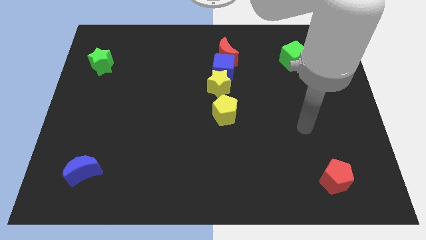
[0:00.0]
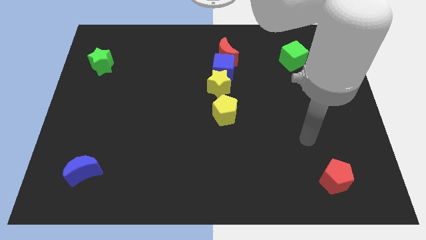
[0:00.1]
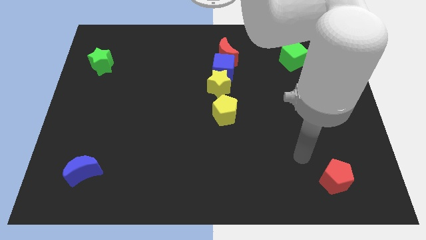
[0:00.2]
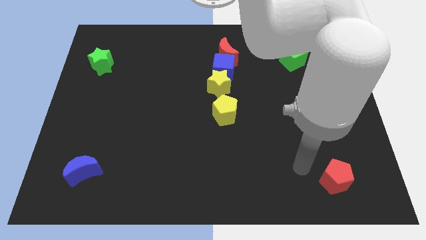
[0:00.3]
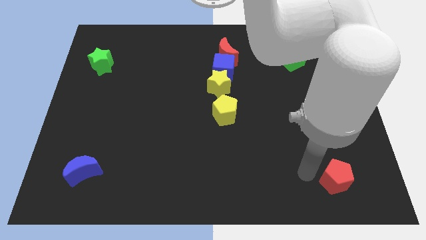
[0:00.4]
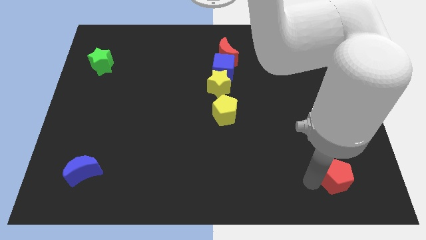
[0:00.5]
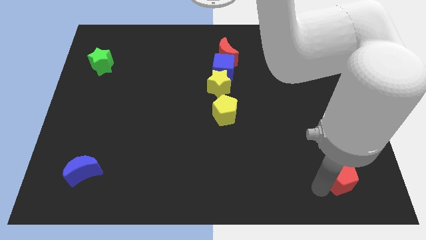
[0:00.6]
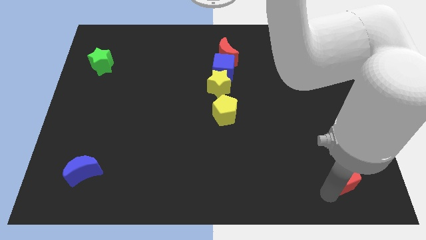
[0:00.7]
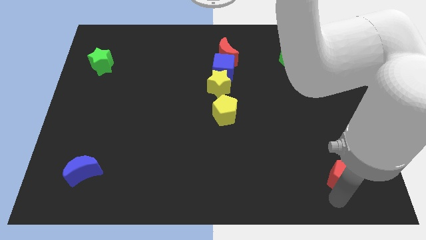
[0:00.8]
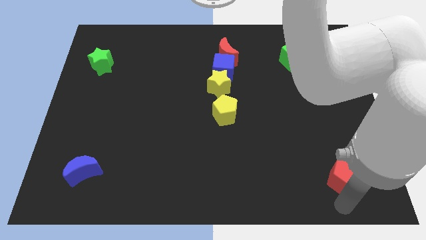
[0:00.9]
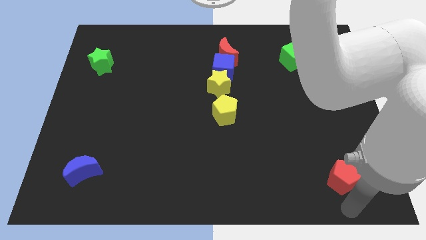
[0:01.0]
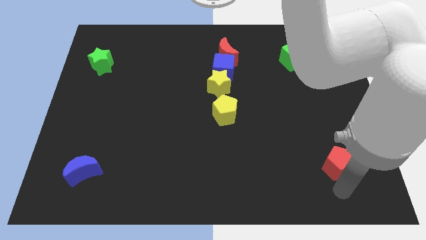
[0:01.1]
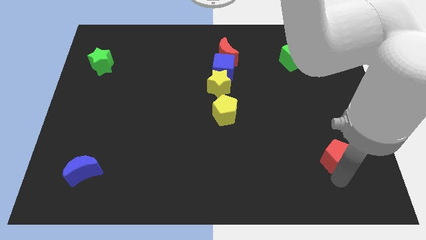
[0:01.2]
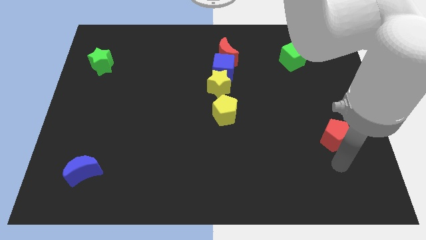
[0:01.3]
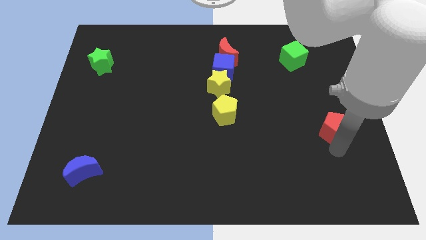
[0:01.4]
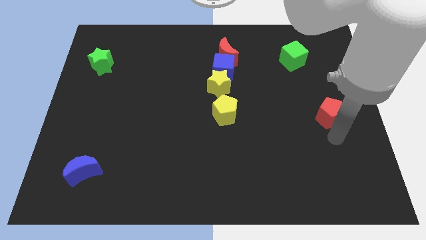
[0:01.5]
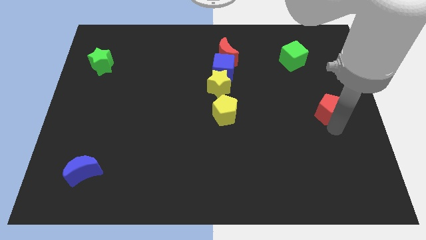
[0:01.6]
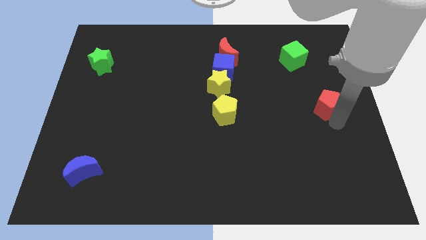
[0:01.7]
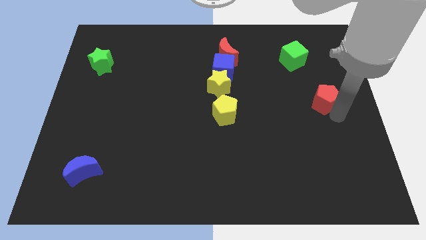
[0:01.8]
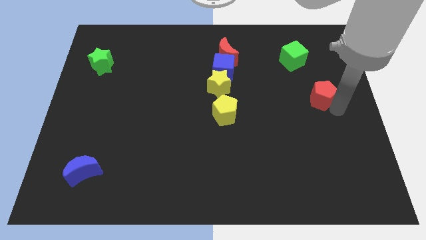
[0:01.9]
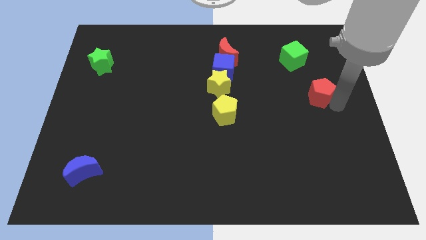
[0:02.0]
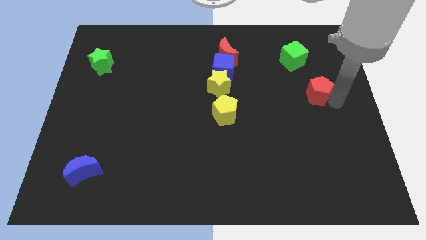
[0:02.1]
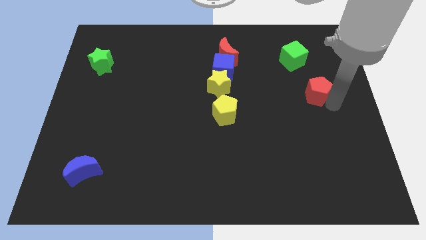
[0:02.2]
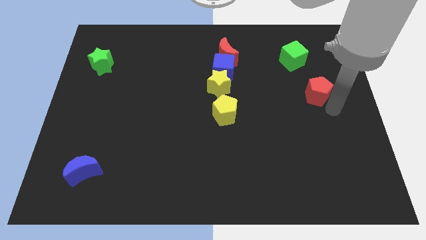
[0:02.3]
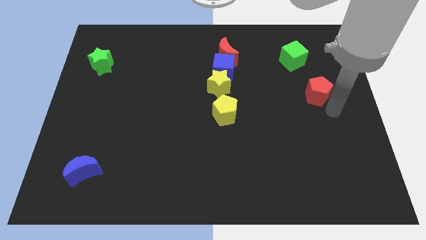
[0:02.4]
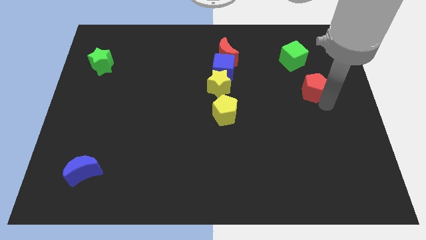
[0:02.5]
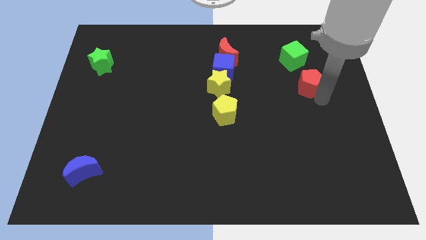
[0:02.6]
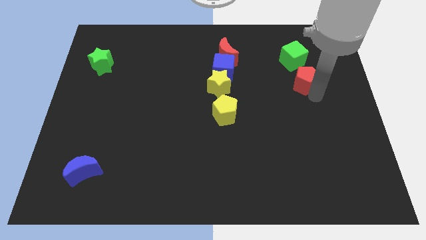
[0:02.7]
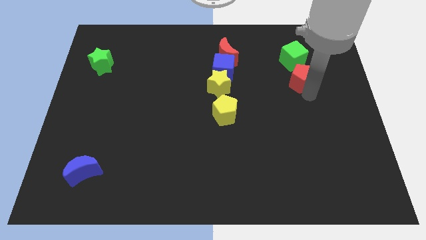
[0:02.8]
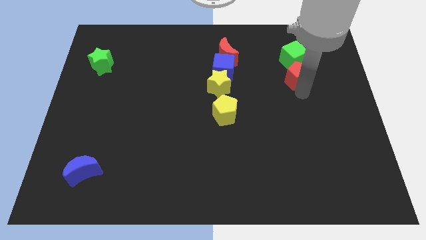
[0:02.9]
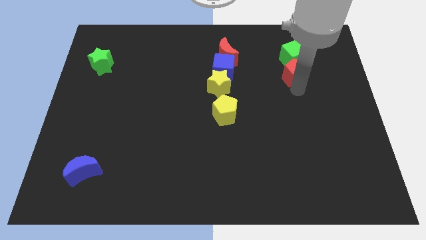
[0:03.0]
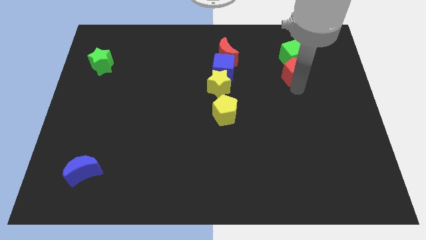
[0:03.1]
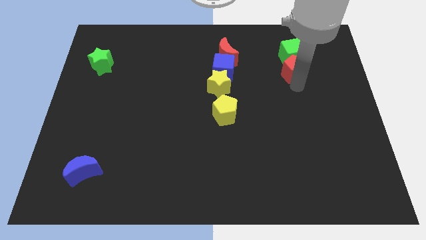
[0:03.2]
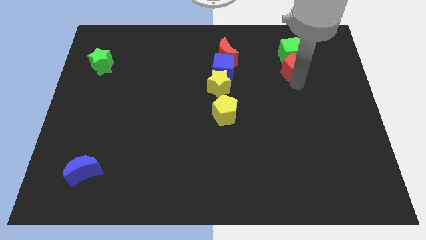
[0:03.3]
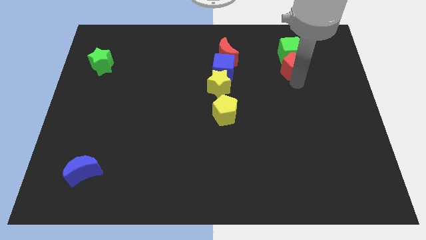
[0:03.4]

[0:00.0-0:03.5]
move the red pentagon to the green cube

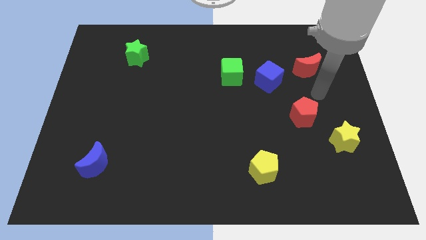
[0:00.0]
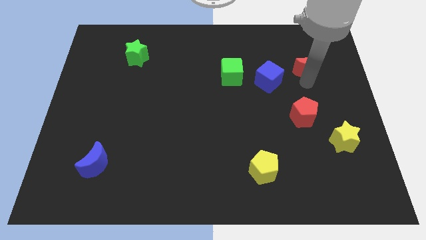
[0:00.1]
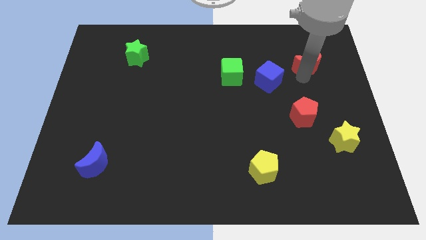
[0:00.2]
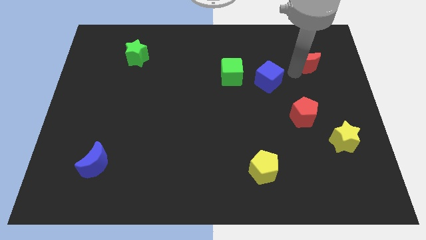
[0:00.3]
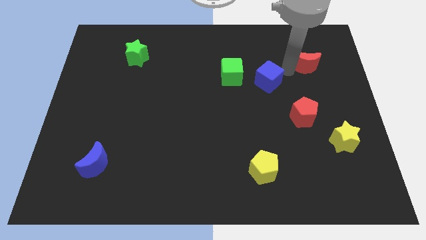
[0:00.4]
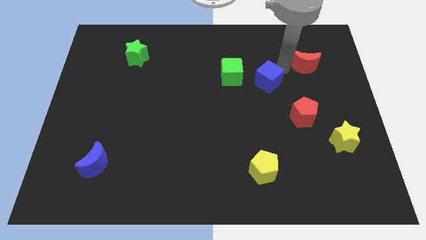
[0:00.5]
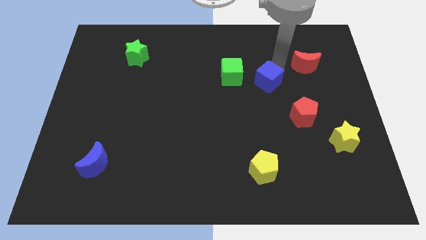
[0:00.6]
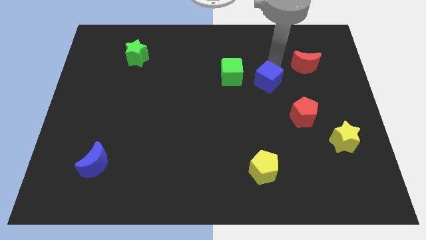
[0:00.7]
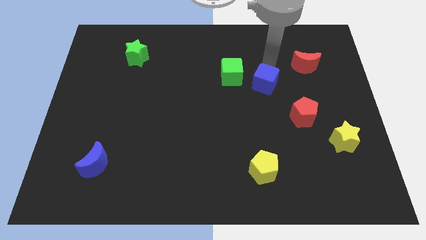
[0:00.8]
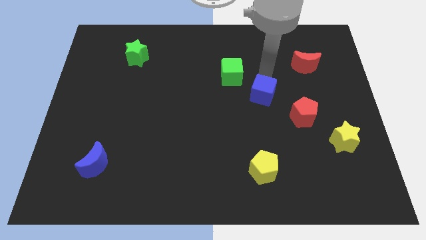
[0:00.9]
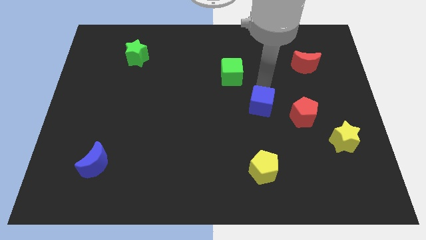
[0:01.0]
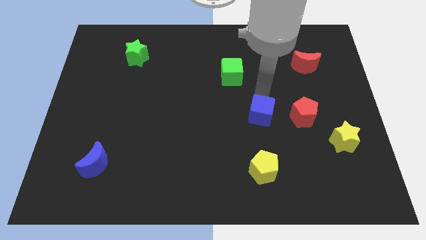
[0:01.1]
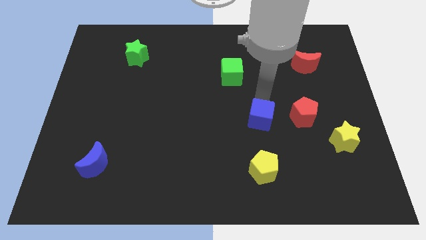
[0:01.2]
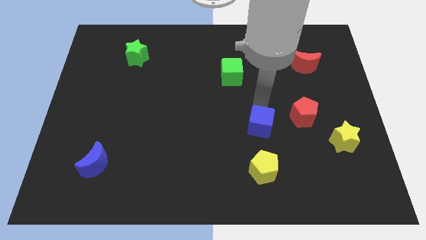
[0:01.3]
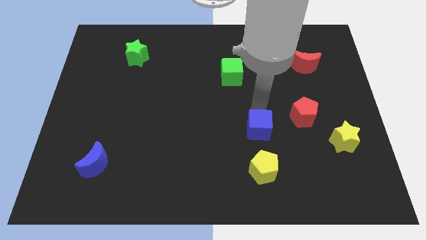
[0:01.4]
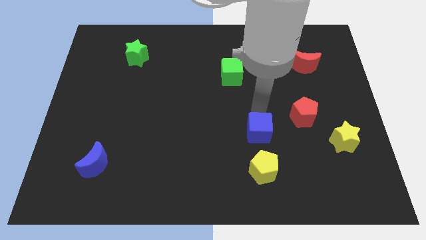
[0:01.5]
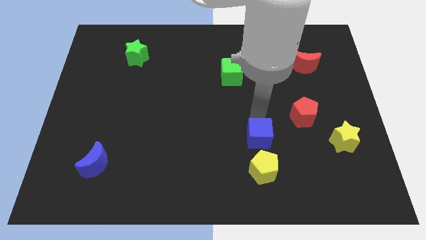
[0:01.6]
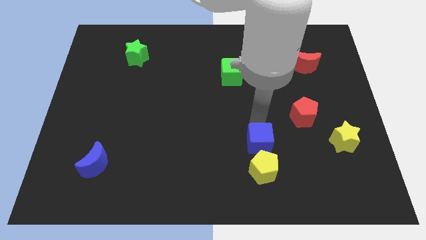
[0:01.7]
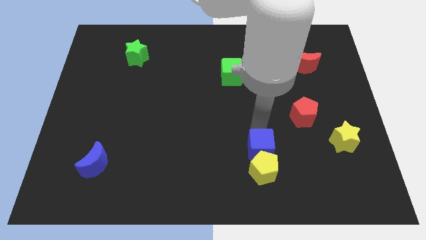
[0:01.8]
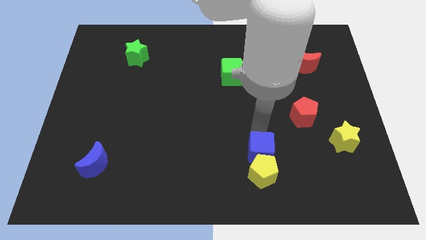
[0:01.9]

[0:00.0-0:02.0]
push the blue cube next to the yellow pentagon

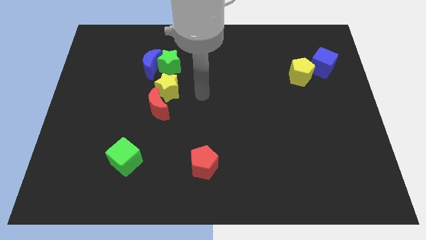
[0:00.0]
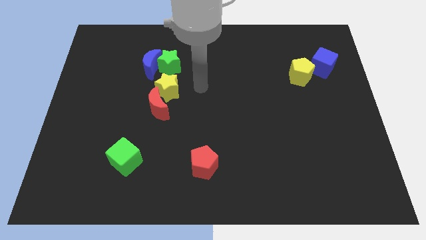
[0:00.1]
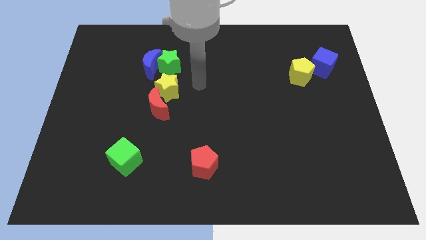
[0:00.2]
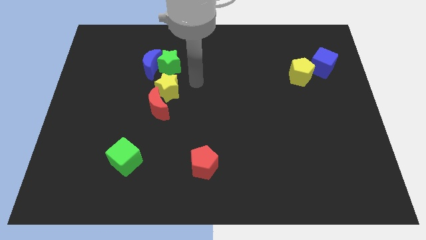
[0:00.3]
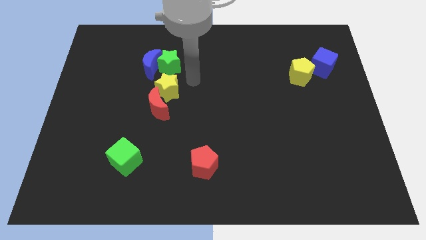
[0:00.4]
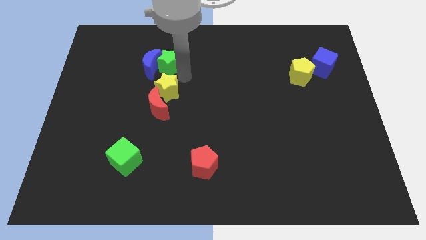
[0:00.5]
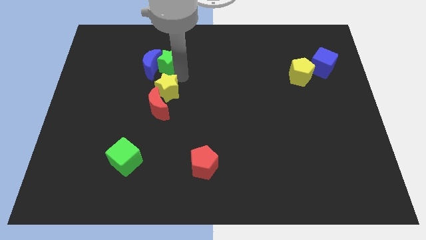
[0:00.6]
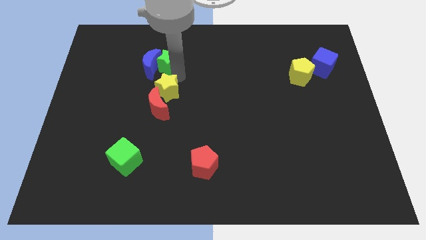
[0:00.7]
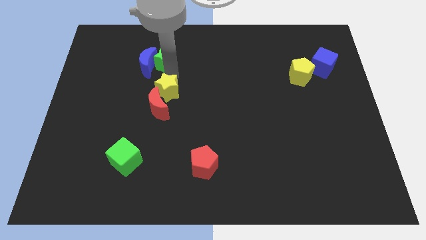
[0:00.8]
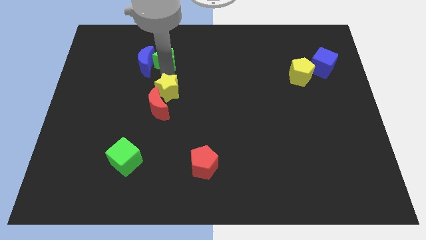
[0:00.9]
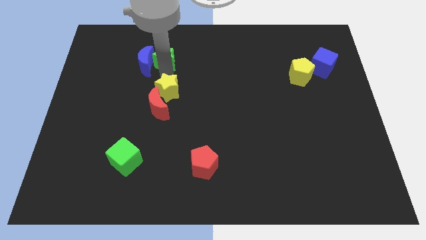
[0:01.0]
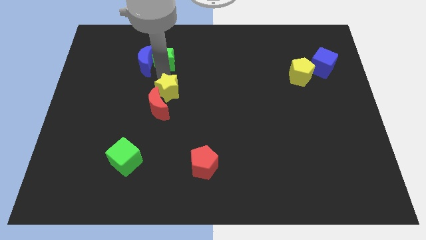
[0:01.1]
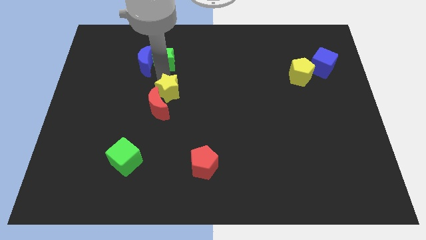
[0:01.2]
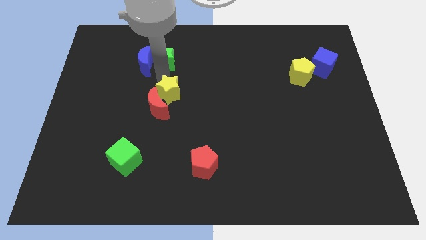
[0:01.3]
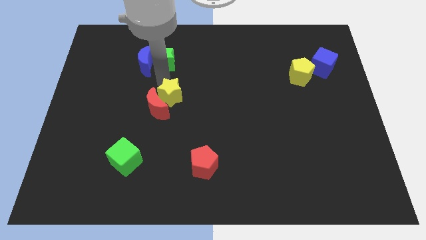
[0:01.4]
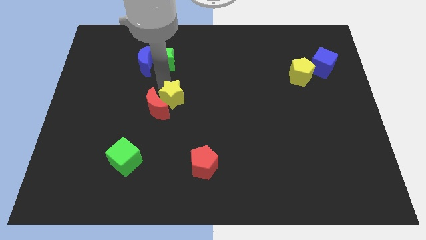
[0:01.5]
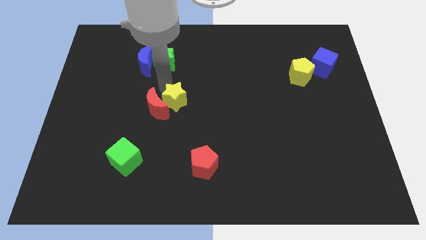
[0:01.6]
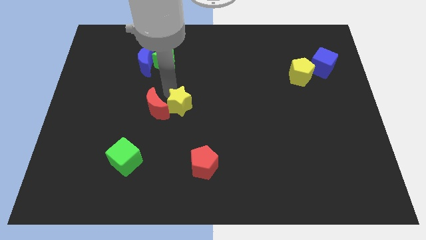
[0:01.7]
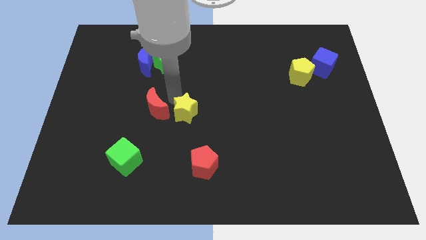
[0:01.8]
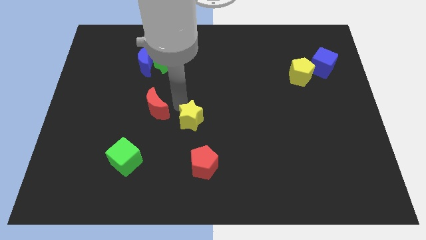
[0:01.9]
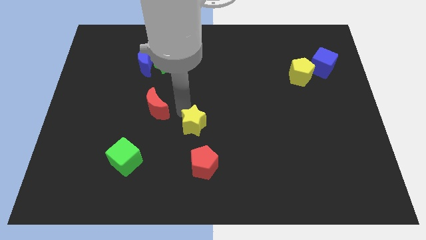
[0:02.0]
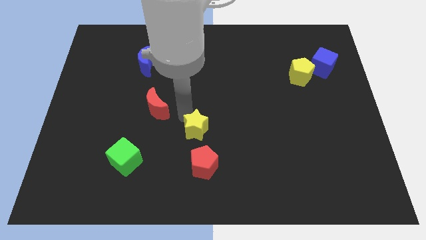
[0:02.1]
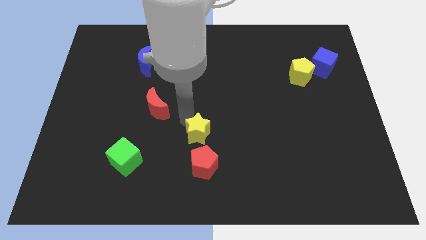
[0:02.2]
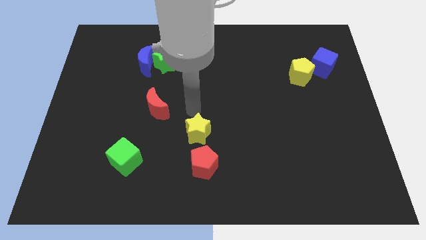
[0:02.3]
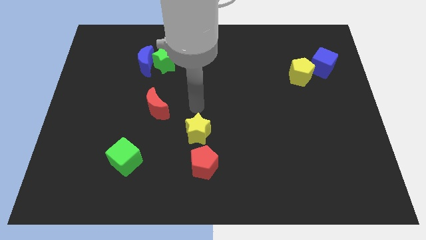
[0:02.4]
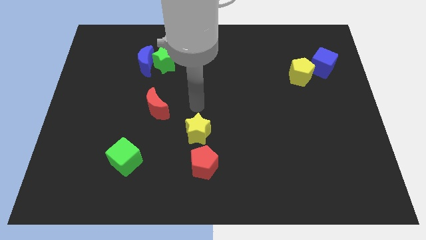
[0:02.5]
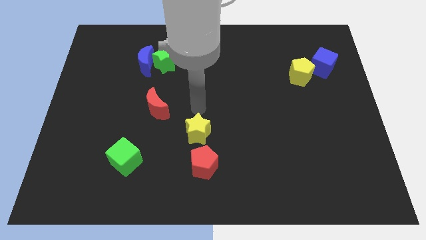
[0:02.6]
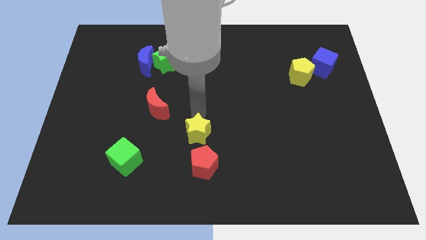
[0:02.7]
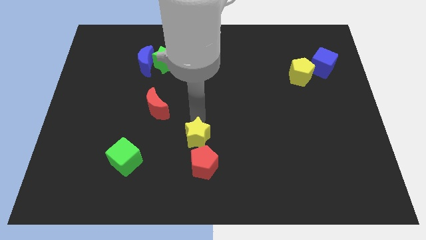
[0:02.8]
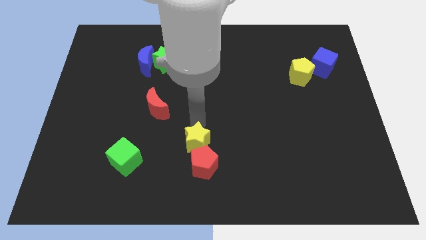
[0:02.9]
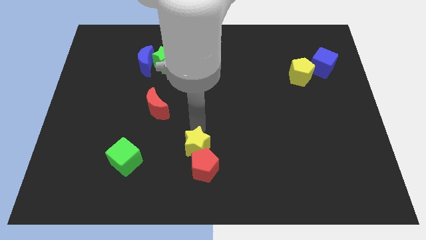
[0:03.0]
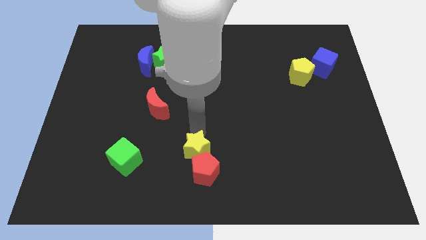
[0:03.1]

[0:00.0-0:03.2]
slide the yellow star close to the red pentagon
